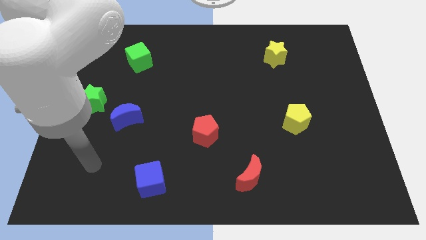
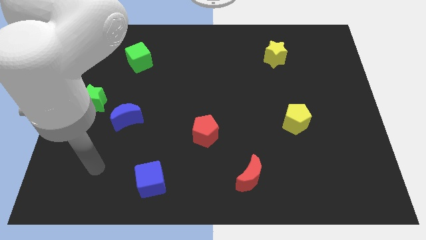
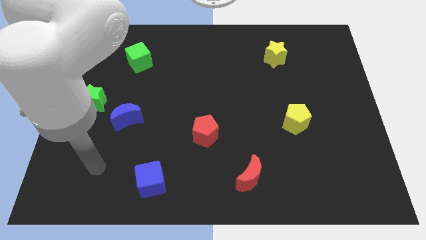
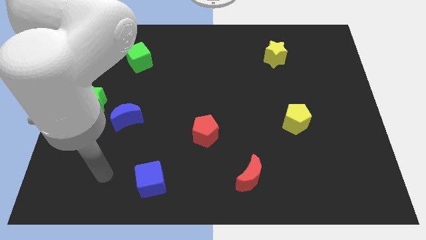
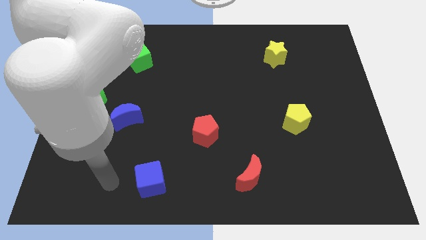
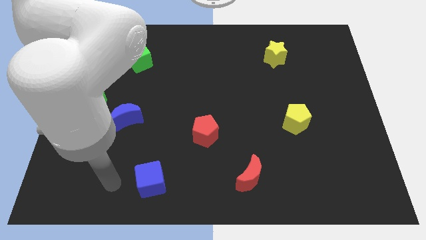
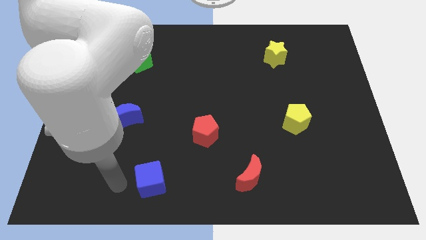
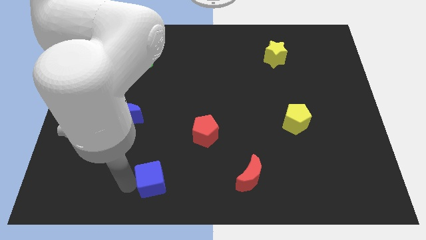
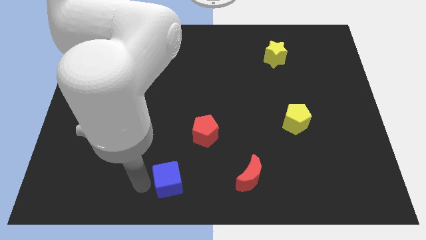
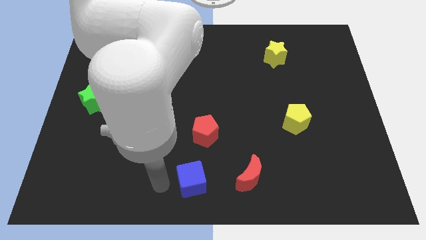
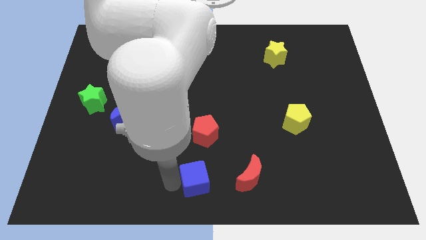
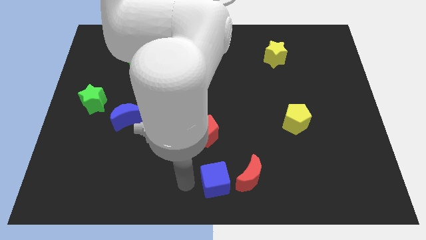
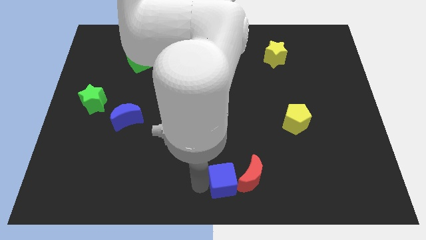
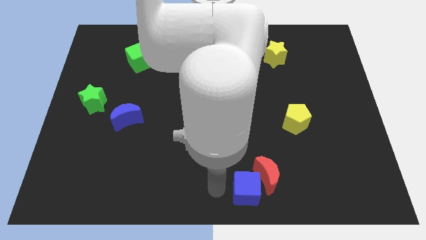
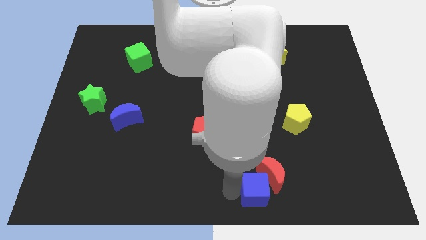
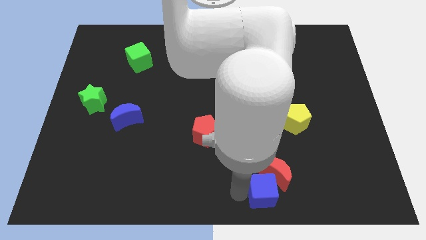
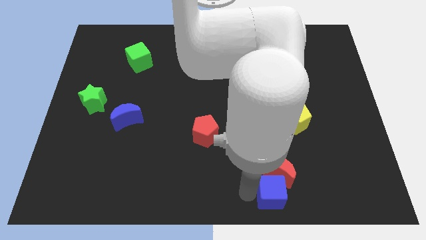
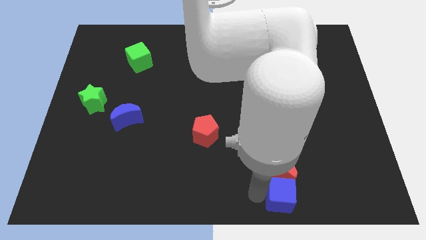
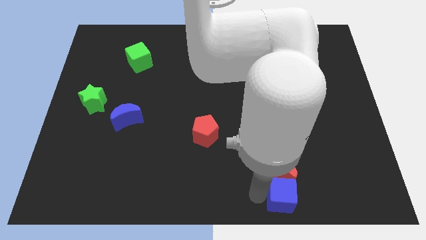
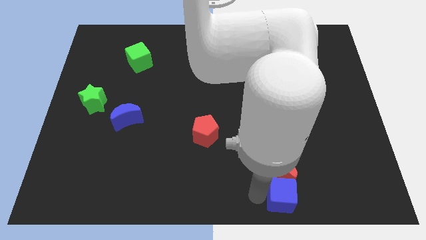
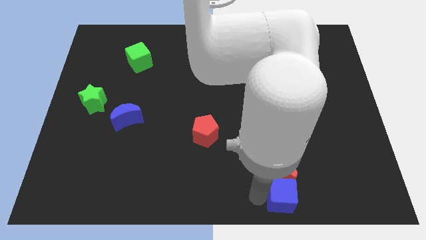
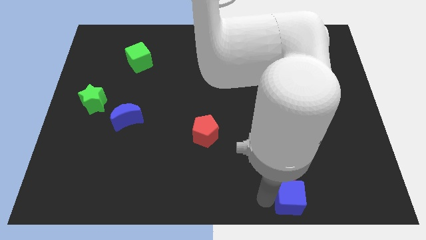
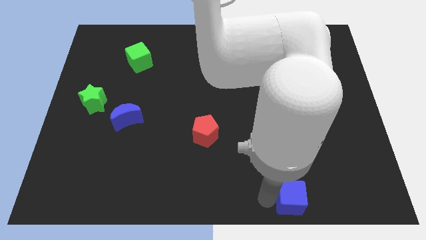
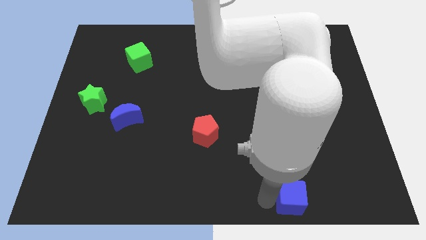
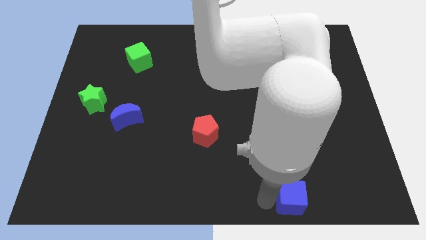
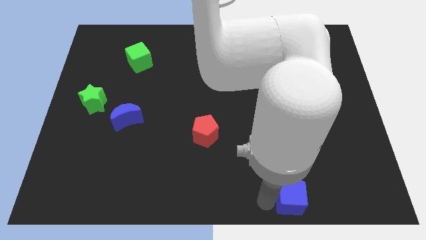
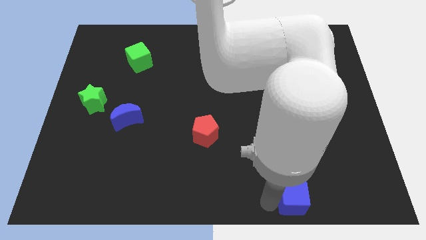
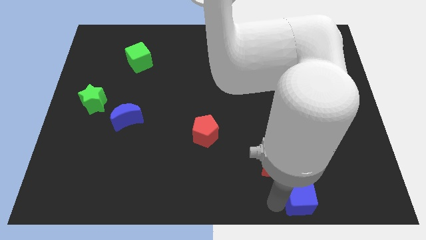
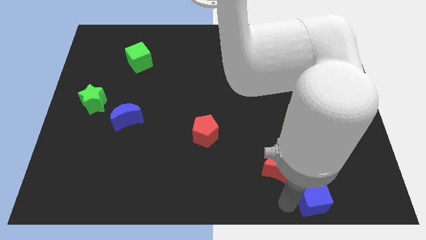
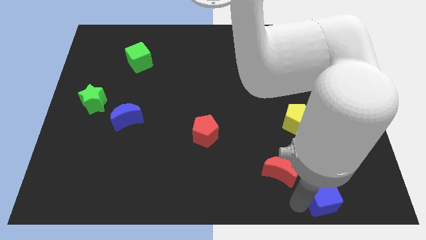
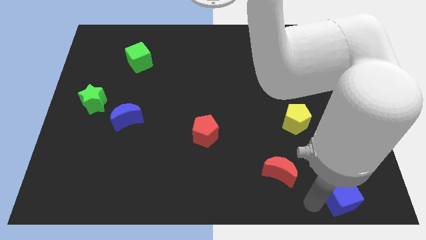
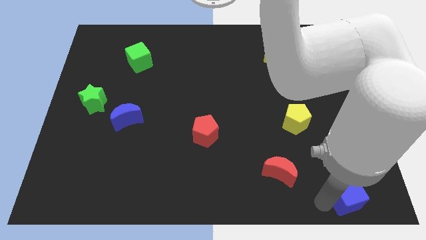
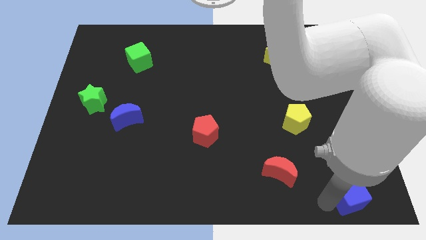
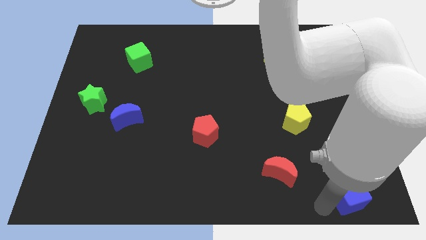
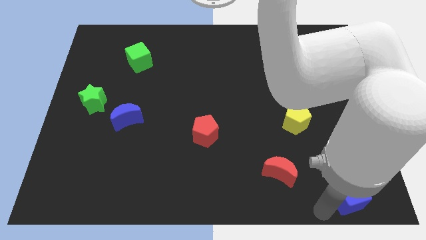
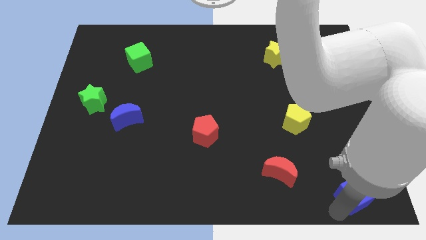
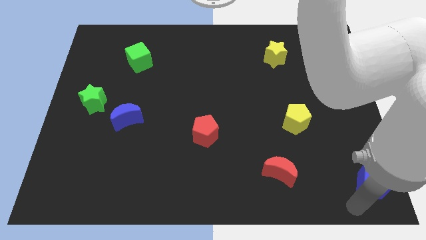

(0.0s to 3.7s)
push the blue cube to the bottom right of the board

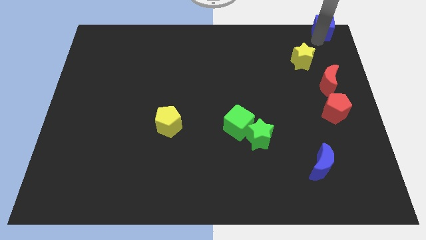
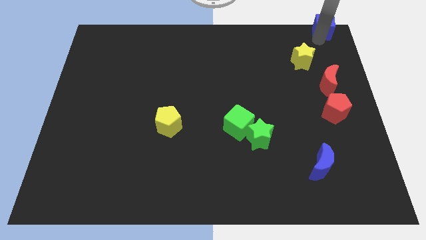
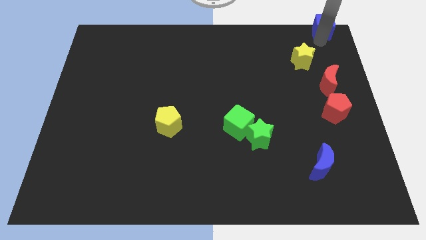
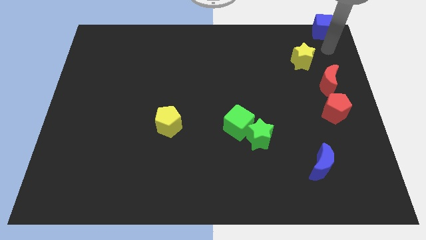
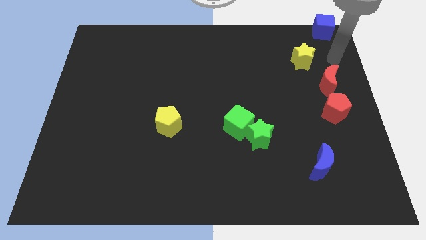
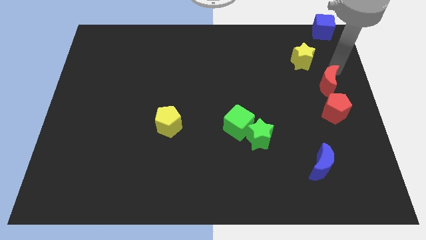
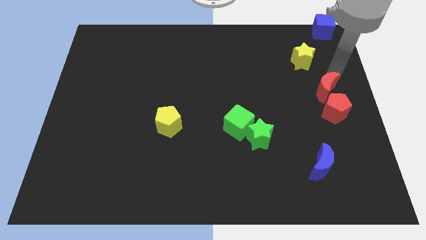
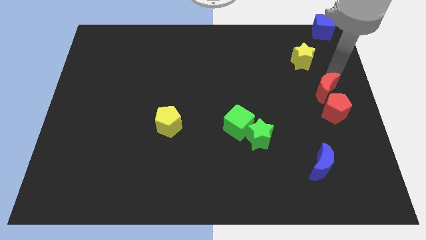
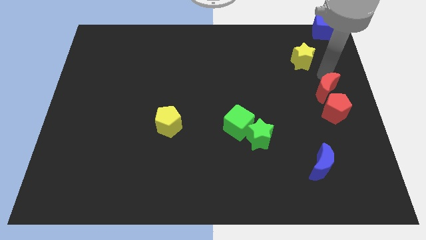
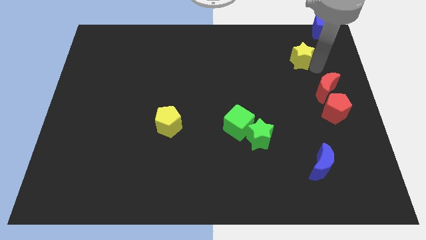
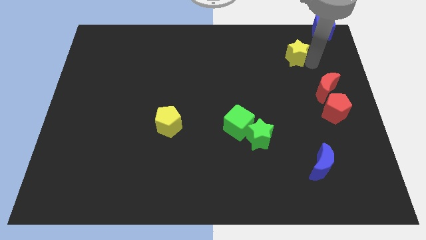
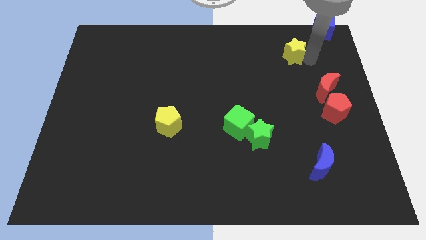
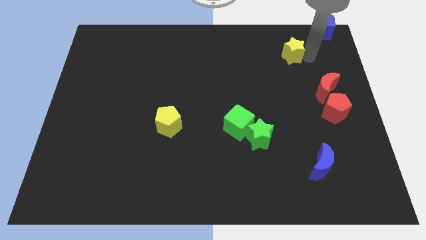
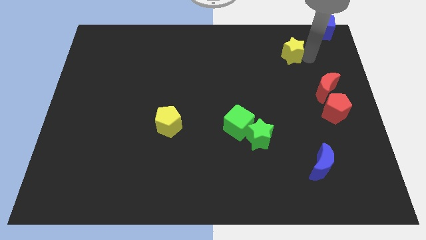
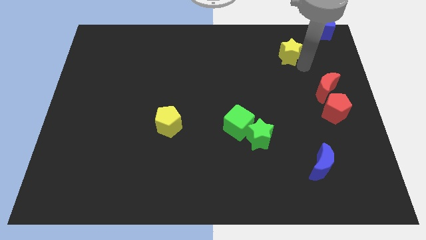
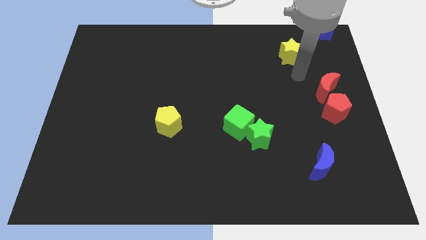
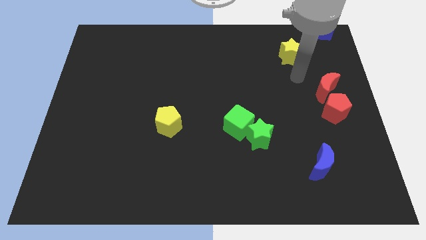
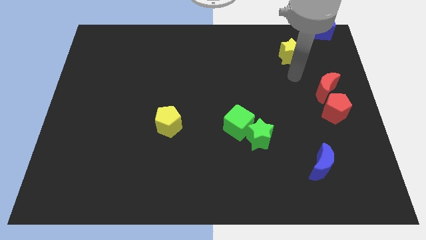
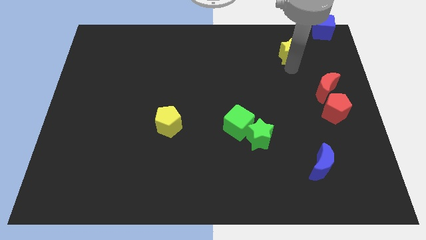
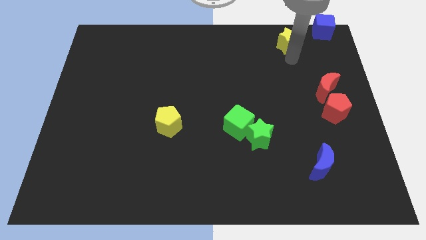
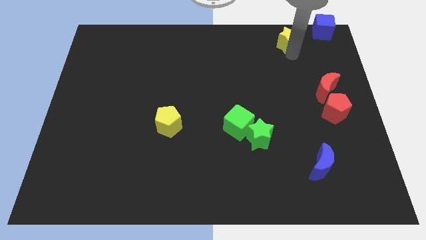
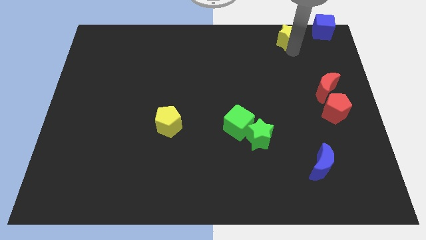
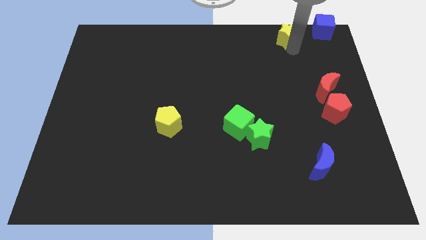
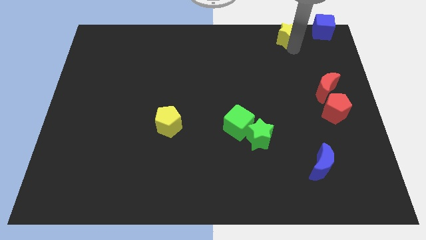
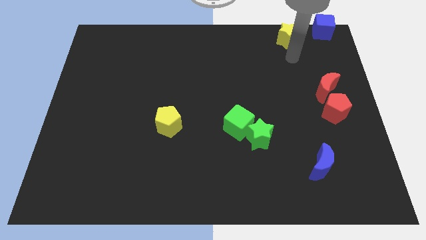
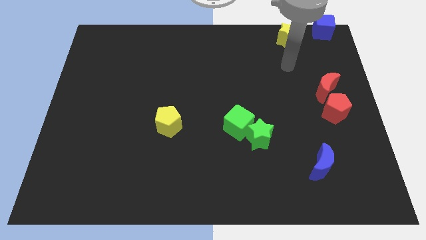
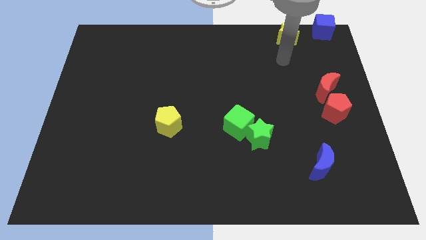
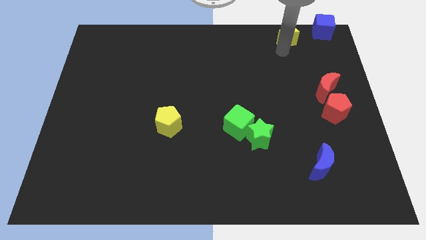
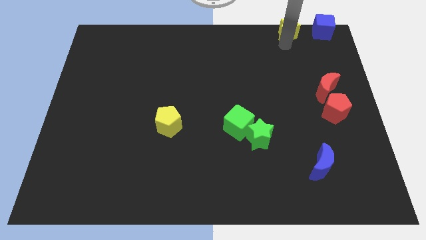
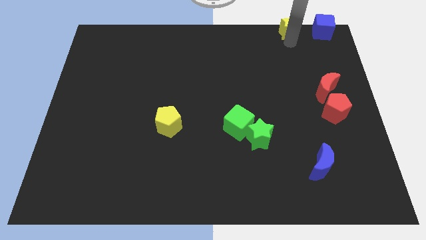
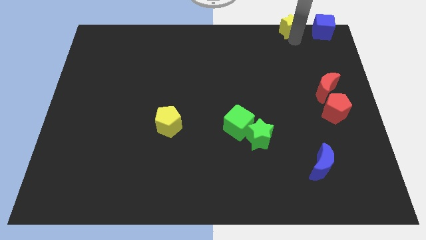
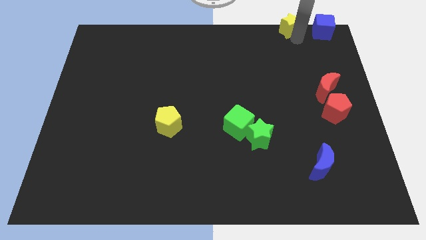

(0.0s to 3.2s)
move yellow star to the left of blue cube

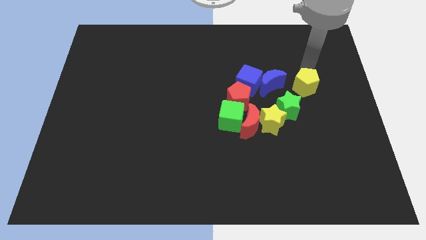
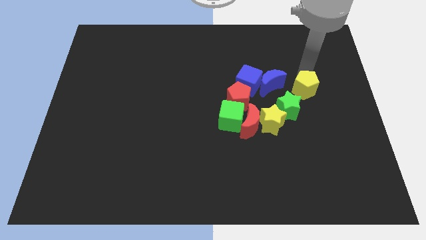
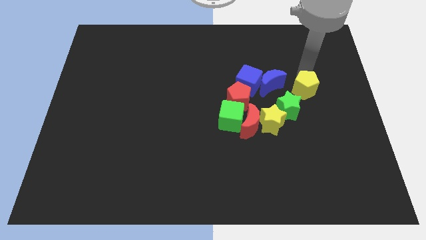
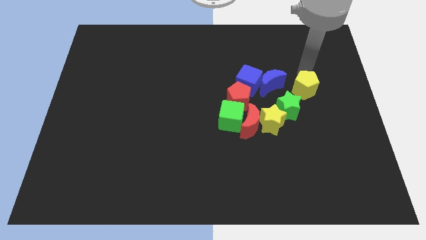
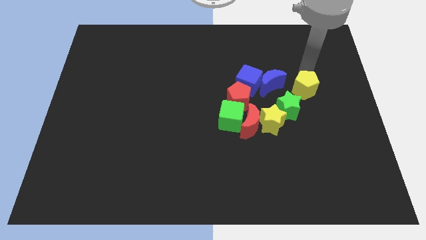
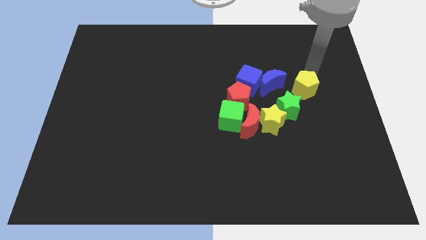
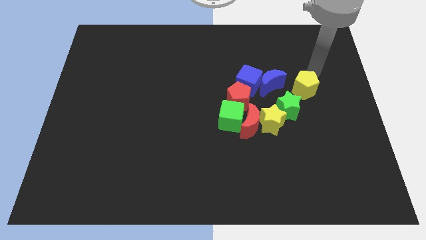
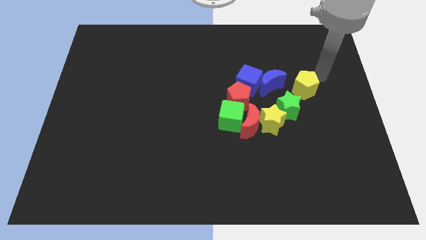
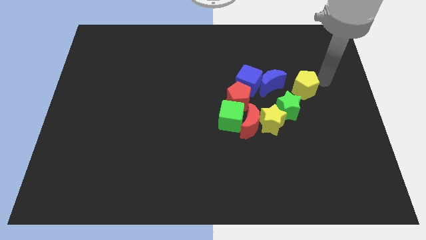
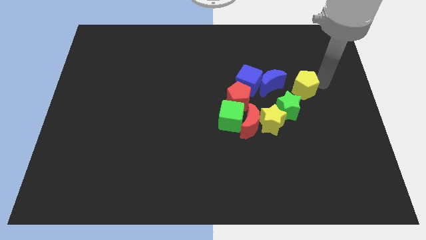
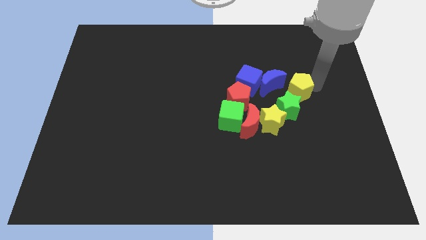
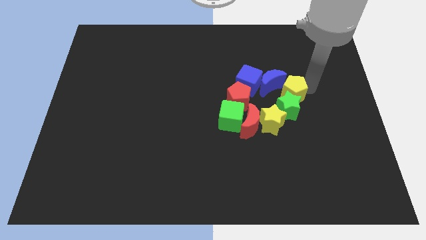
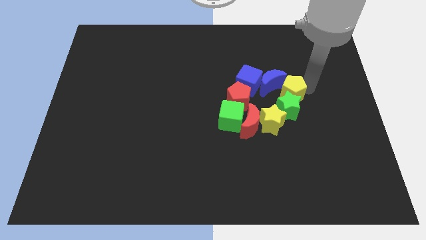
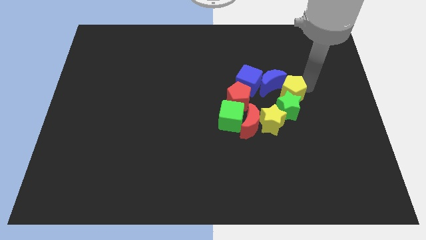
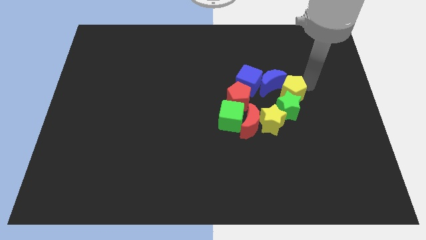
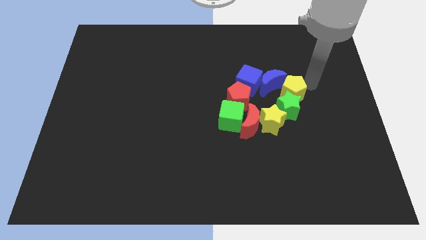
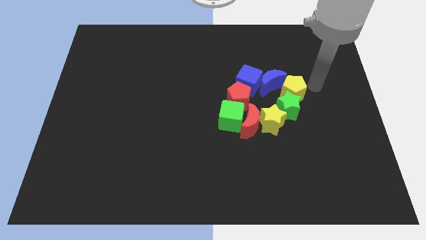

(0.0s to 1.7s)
place the yellow pentagon in between the green star and the blue moon

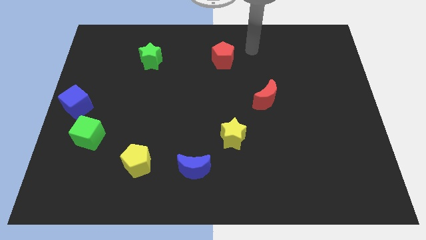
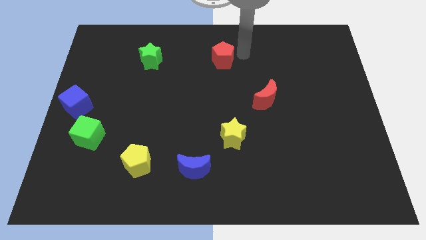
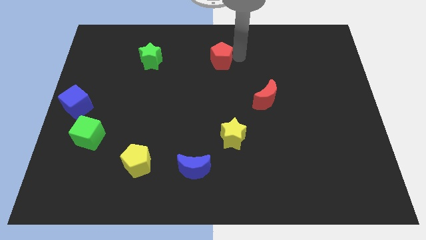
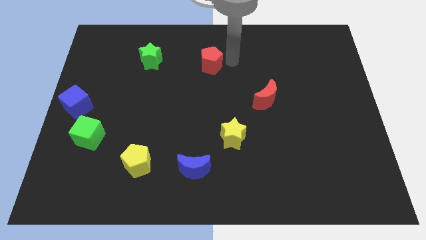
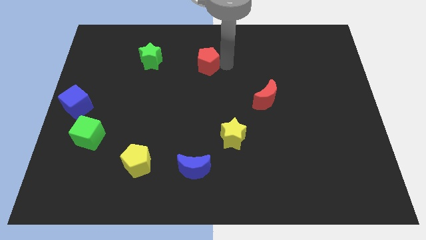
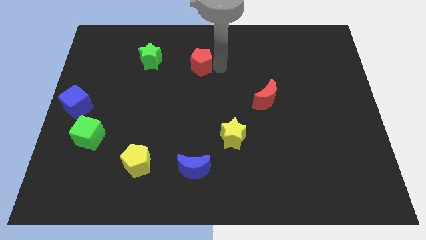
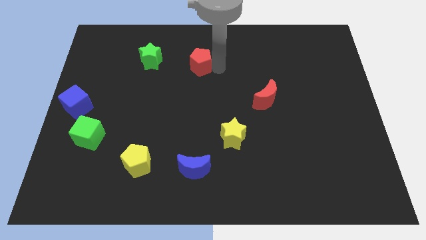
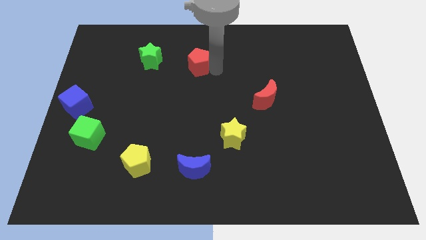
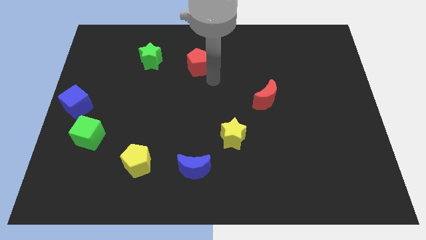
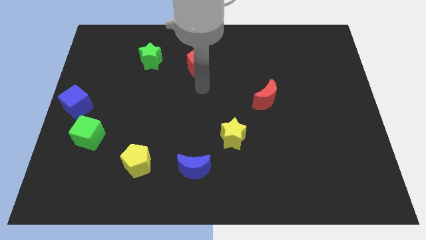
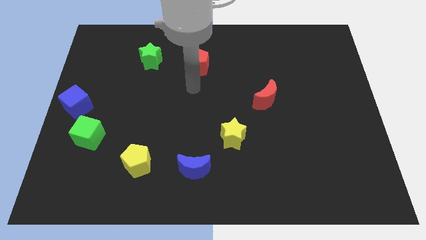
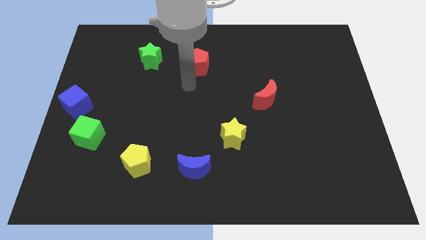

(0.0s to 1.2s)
push the red pentagon to the right of the green star
